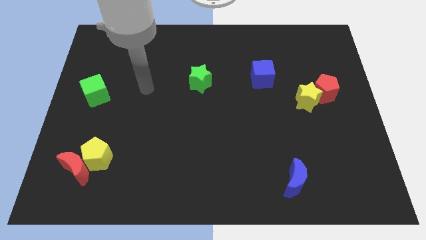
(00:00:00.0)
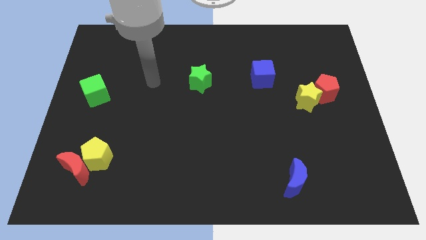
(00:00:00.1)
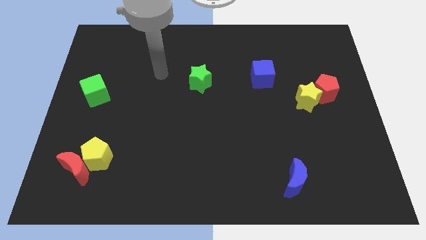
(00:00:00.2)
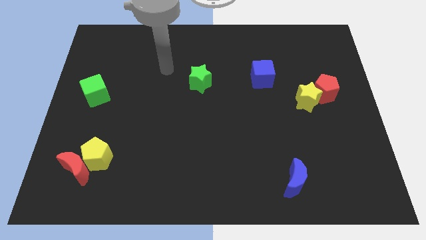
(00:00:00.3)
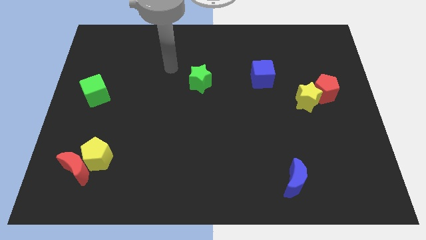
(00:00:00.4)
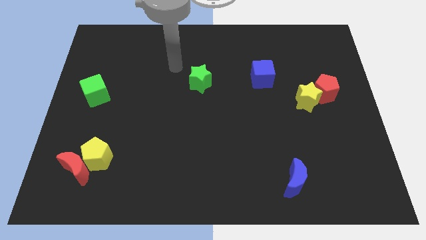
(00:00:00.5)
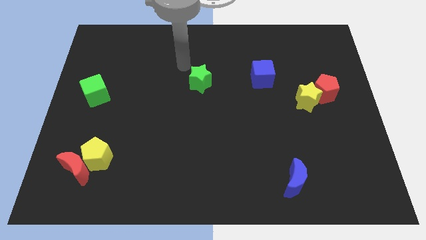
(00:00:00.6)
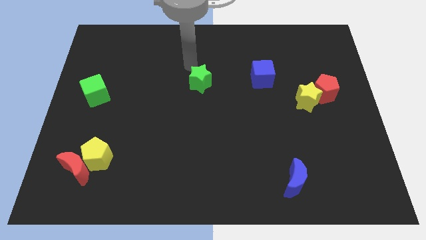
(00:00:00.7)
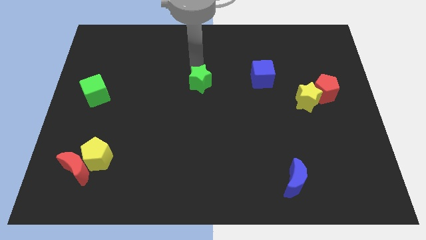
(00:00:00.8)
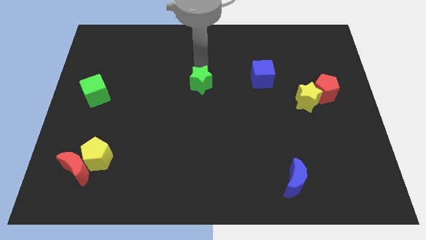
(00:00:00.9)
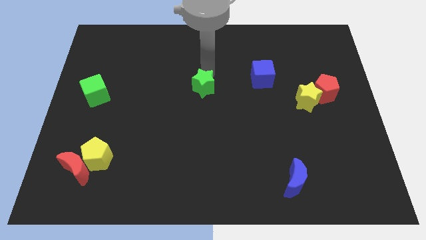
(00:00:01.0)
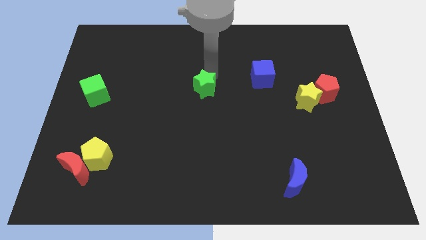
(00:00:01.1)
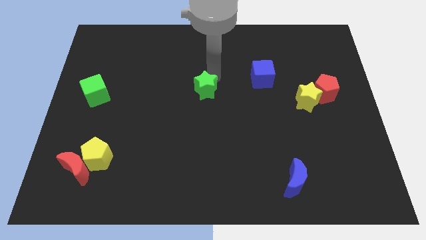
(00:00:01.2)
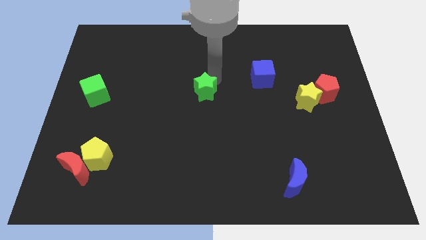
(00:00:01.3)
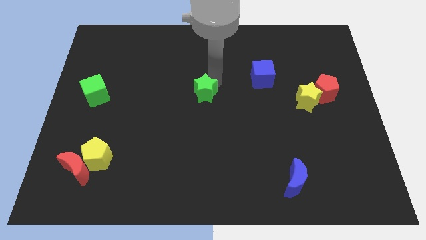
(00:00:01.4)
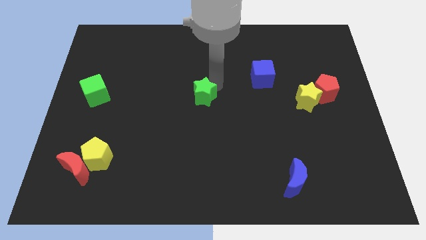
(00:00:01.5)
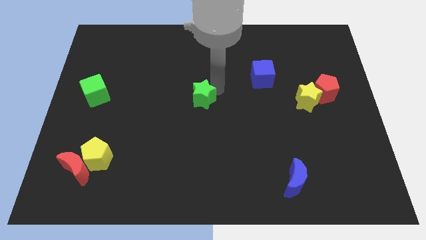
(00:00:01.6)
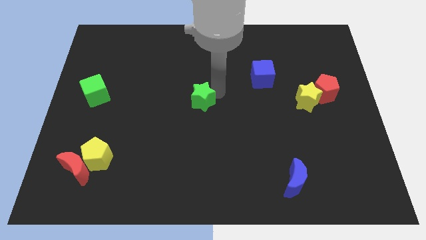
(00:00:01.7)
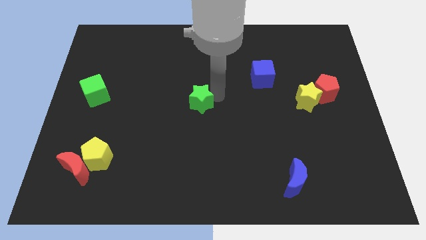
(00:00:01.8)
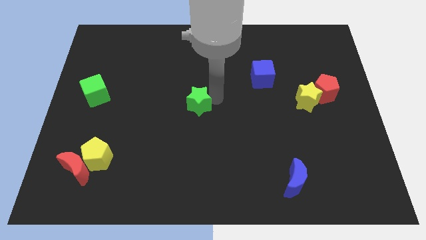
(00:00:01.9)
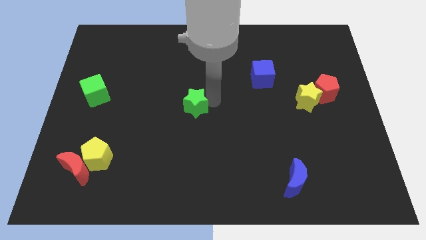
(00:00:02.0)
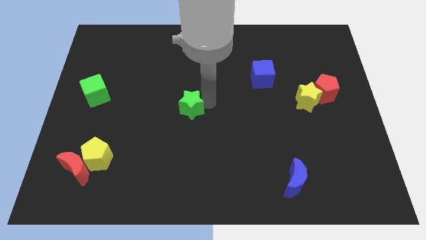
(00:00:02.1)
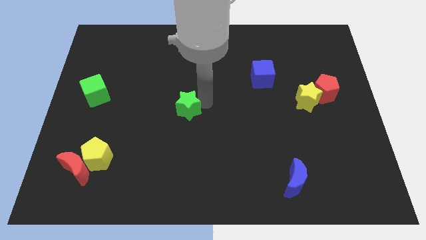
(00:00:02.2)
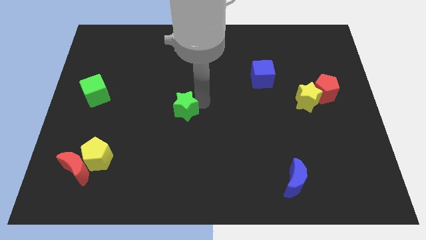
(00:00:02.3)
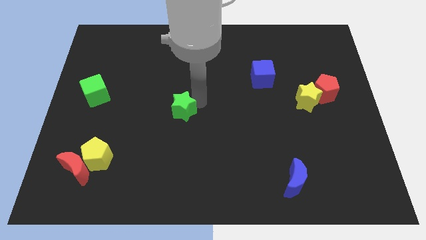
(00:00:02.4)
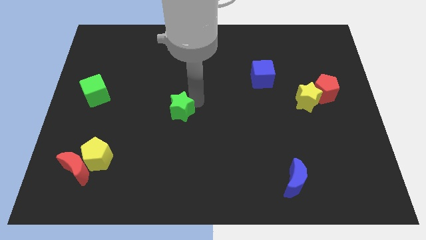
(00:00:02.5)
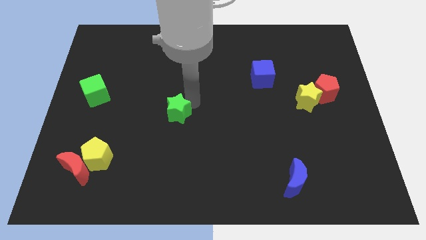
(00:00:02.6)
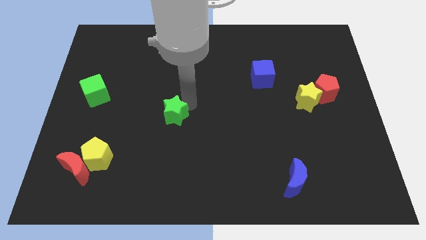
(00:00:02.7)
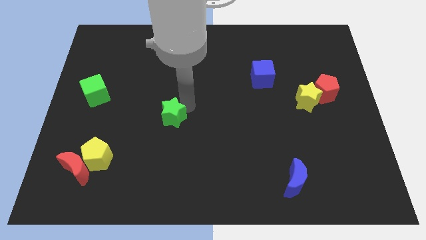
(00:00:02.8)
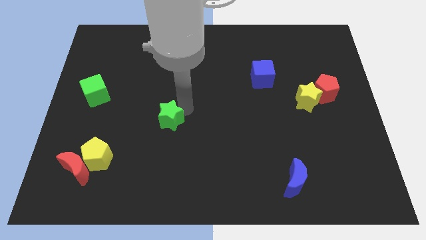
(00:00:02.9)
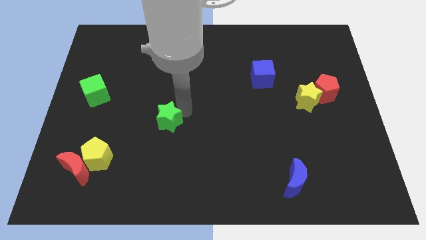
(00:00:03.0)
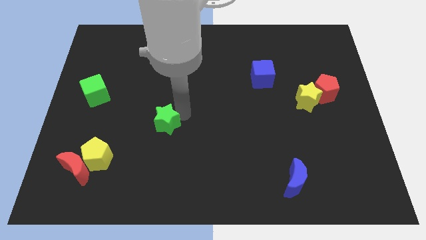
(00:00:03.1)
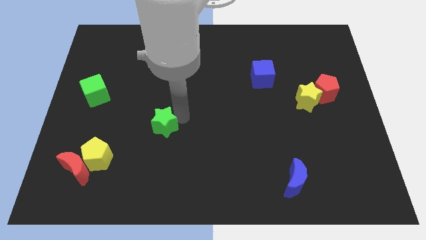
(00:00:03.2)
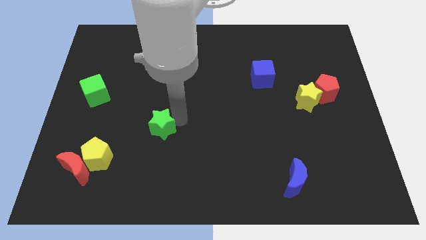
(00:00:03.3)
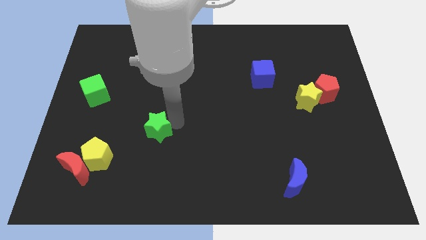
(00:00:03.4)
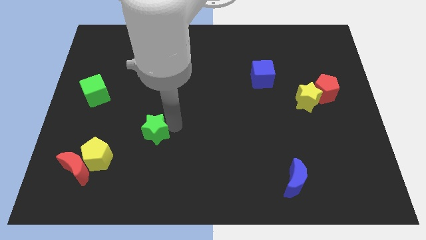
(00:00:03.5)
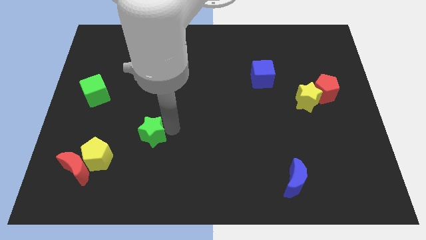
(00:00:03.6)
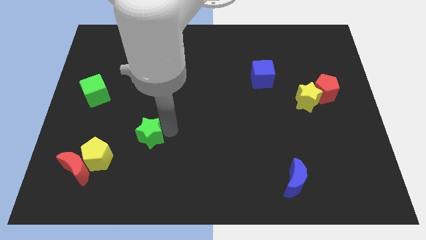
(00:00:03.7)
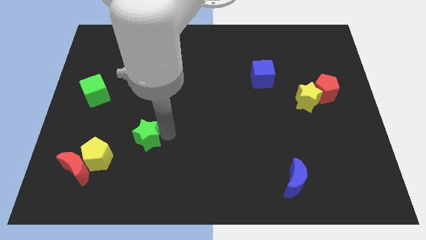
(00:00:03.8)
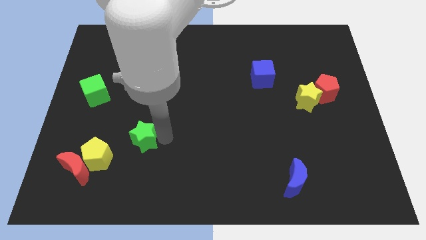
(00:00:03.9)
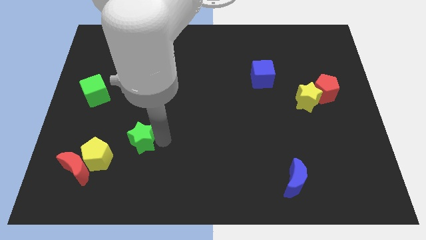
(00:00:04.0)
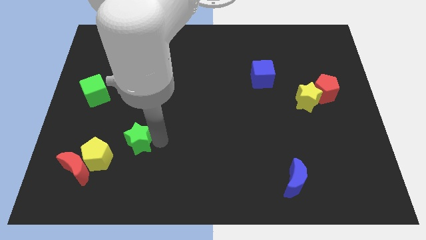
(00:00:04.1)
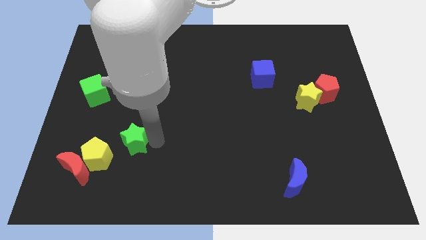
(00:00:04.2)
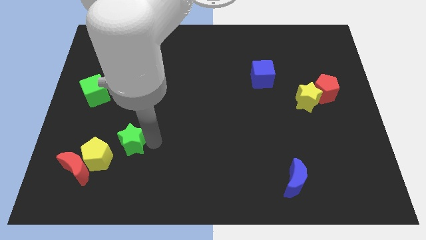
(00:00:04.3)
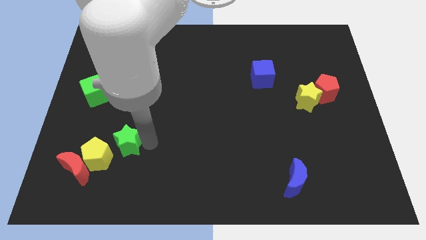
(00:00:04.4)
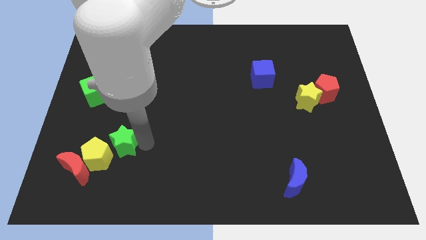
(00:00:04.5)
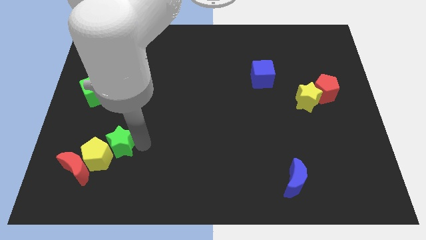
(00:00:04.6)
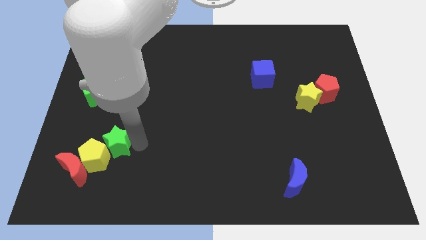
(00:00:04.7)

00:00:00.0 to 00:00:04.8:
push the green star towards the yellow pentagon

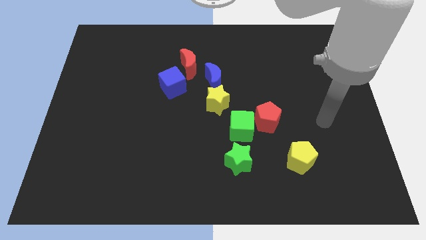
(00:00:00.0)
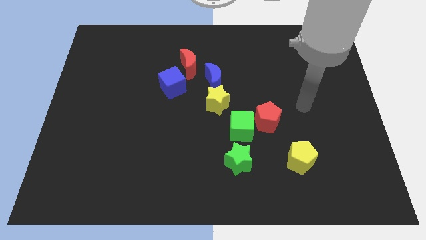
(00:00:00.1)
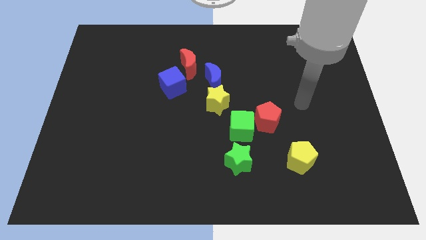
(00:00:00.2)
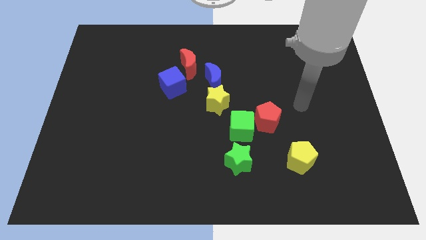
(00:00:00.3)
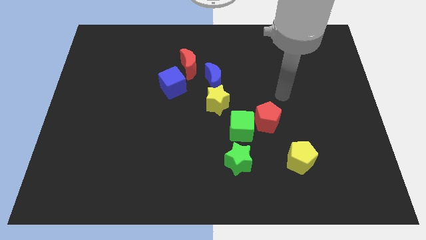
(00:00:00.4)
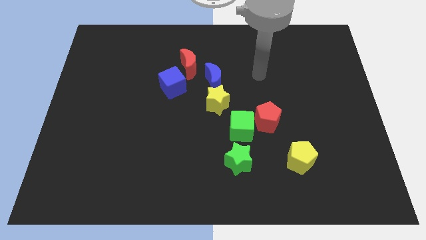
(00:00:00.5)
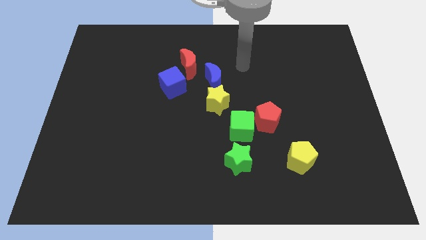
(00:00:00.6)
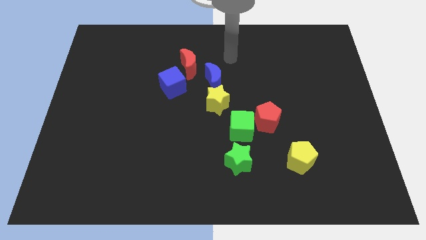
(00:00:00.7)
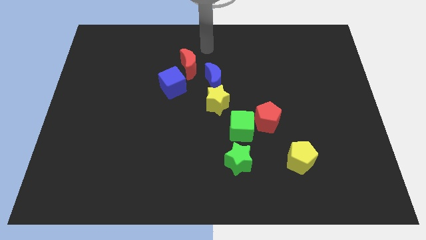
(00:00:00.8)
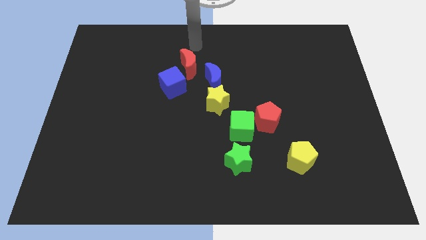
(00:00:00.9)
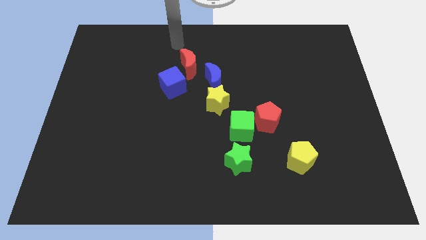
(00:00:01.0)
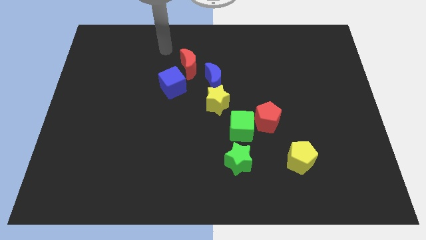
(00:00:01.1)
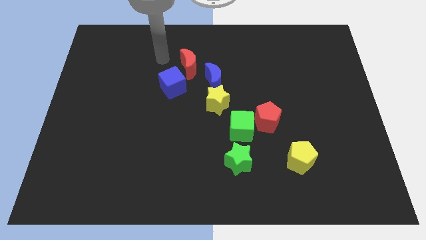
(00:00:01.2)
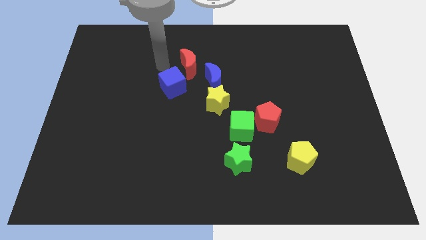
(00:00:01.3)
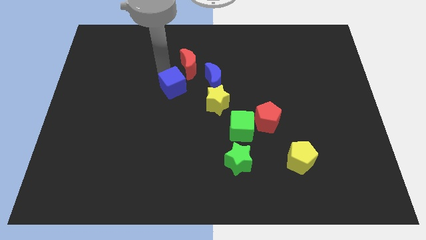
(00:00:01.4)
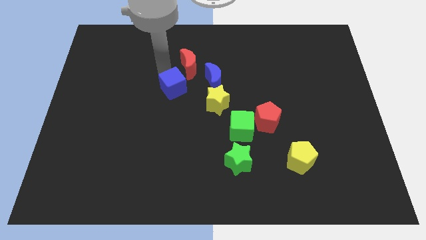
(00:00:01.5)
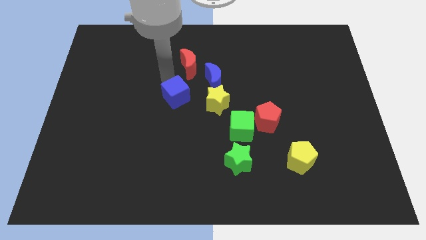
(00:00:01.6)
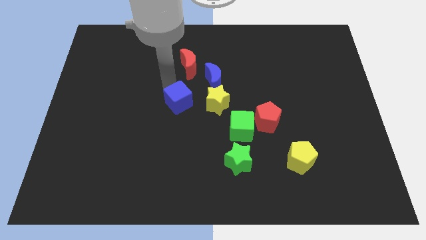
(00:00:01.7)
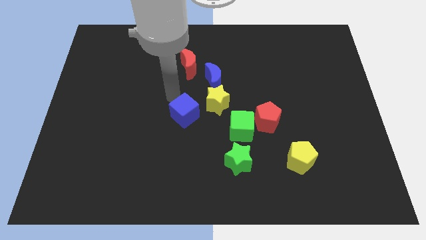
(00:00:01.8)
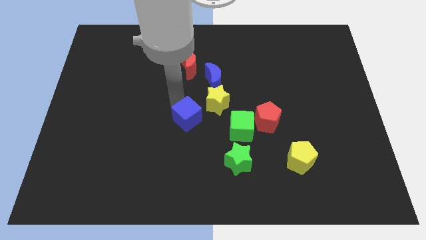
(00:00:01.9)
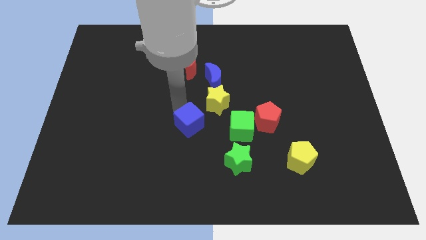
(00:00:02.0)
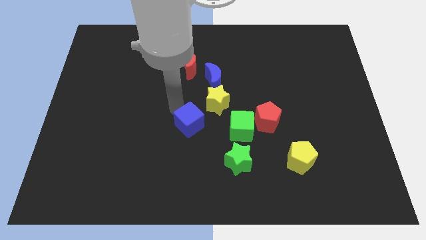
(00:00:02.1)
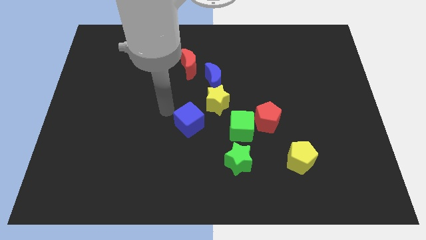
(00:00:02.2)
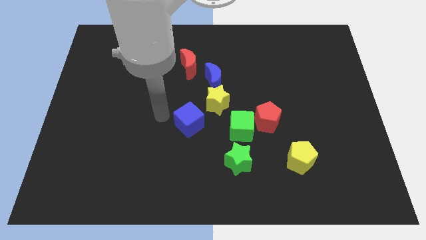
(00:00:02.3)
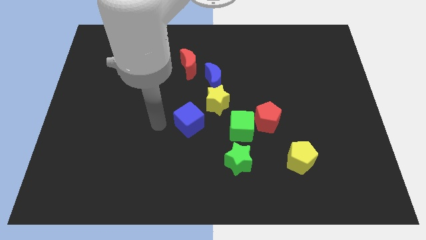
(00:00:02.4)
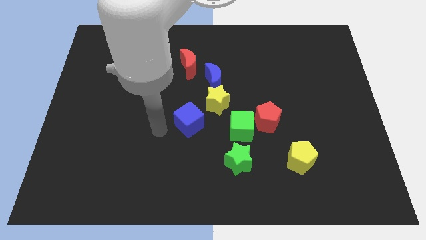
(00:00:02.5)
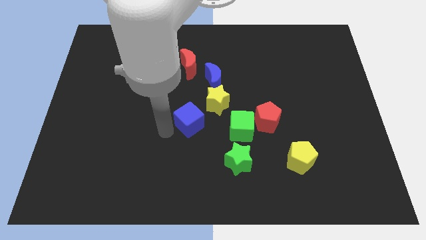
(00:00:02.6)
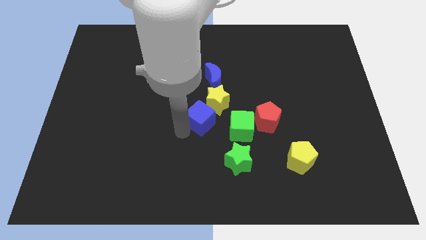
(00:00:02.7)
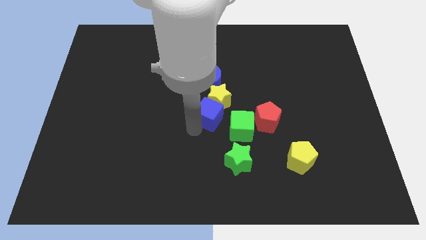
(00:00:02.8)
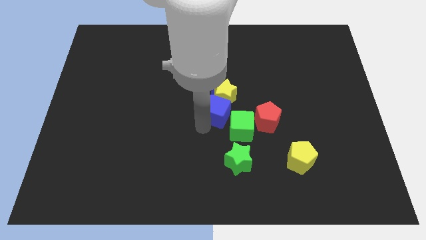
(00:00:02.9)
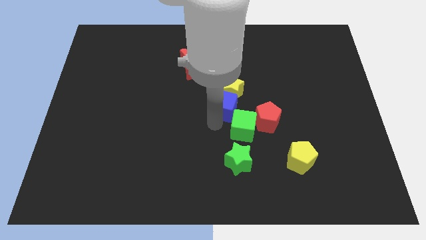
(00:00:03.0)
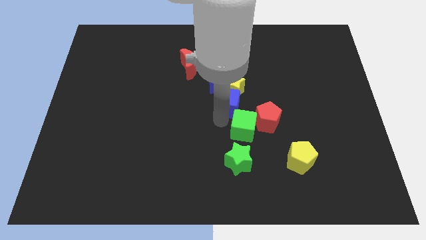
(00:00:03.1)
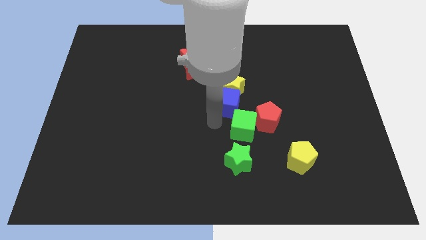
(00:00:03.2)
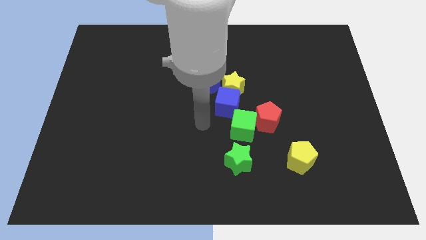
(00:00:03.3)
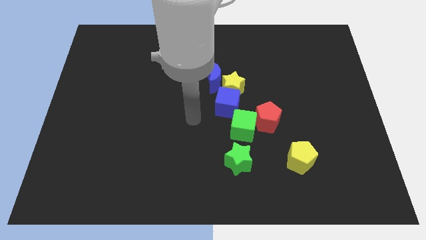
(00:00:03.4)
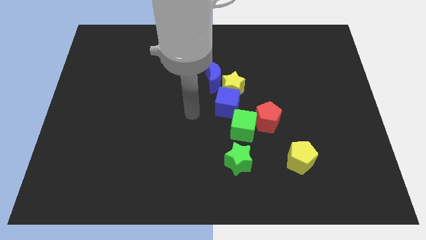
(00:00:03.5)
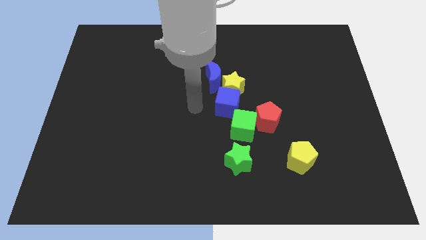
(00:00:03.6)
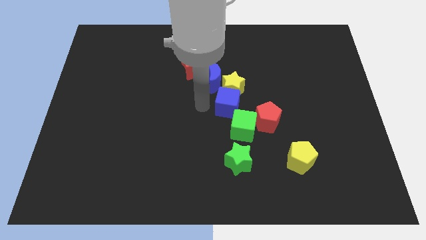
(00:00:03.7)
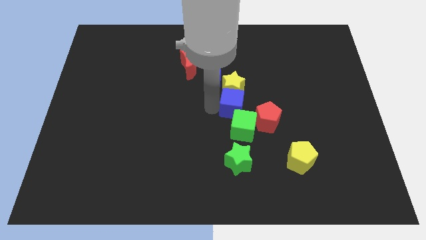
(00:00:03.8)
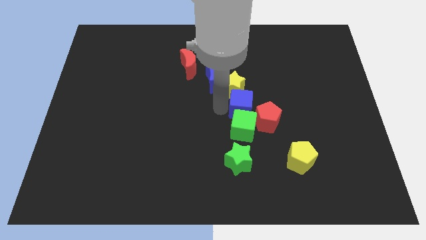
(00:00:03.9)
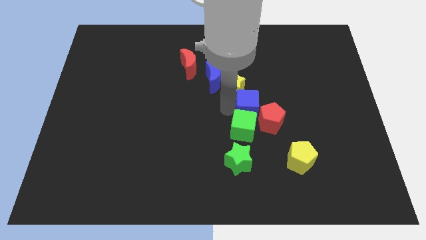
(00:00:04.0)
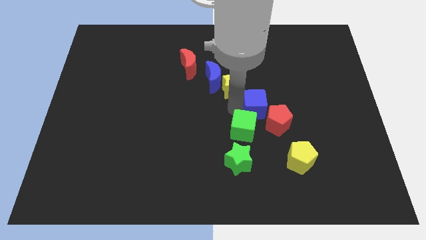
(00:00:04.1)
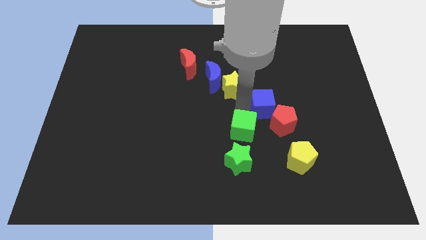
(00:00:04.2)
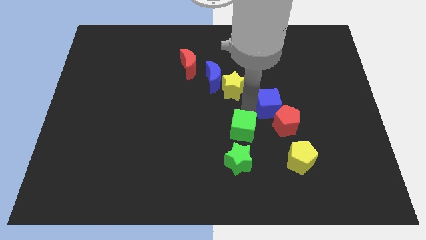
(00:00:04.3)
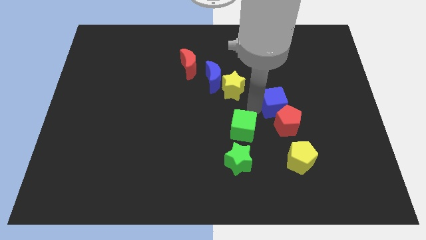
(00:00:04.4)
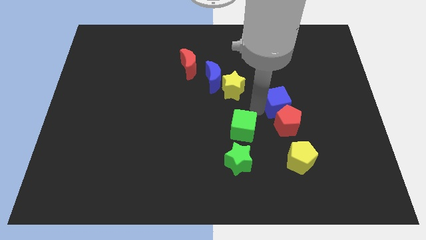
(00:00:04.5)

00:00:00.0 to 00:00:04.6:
push the blue cube close to the red pentagon
